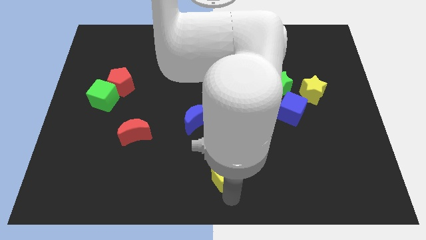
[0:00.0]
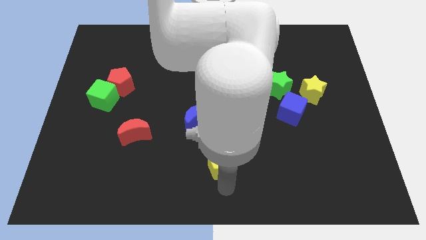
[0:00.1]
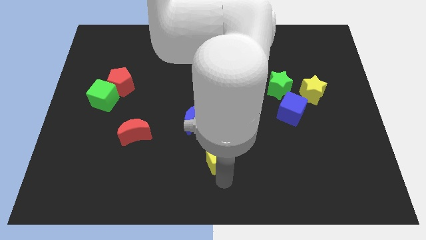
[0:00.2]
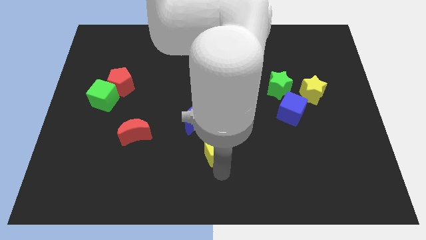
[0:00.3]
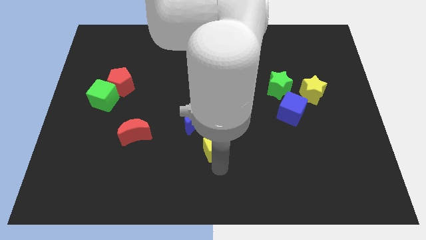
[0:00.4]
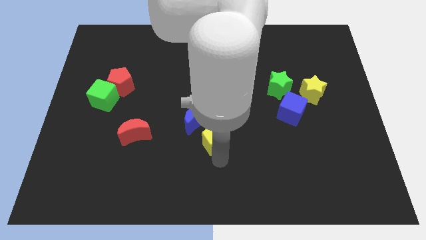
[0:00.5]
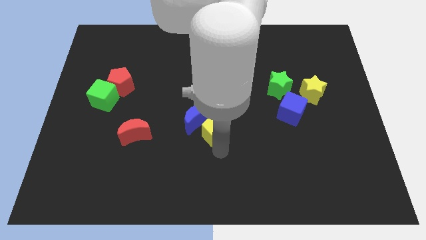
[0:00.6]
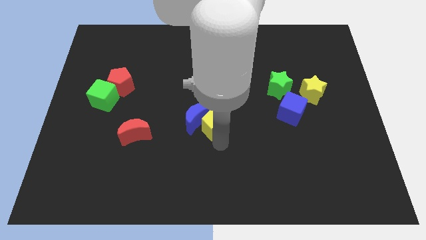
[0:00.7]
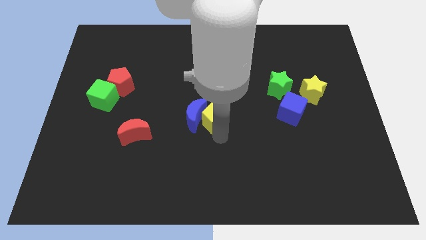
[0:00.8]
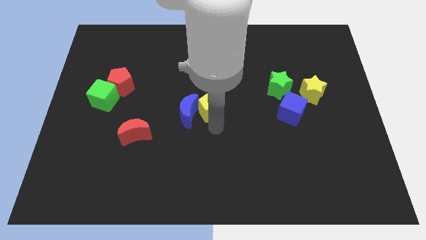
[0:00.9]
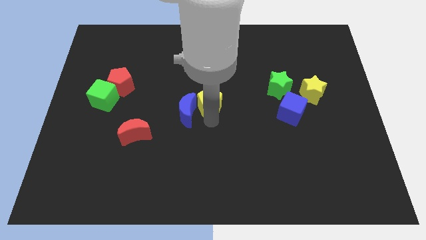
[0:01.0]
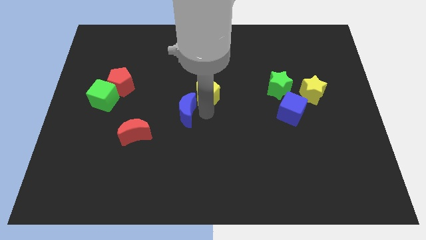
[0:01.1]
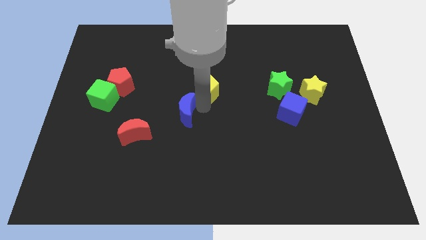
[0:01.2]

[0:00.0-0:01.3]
move the yellow pentagon to the top right corner of the blue moon

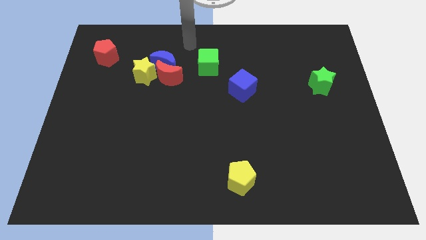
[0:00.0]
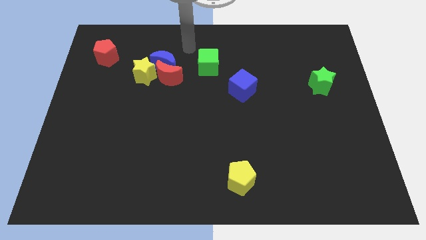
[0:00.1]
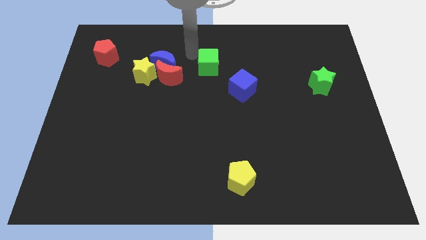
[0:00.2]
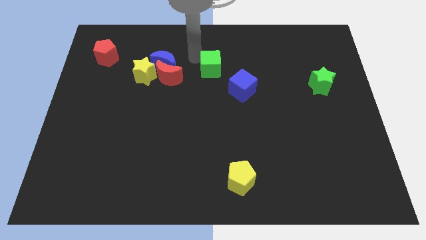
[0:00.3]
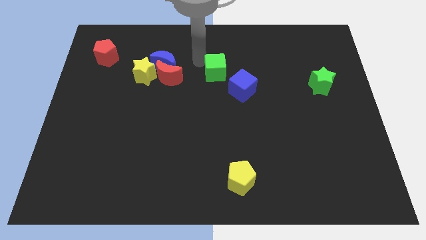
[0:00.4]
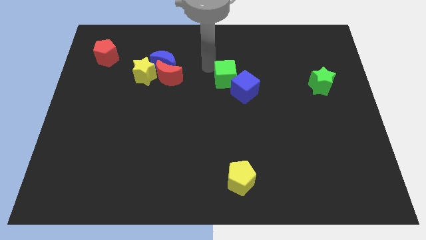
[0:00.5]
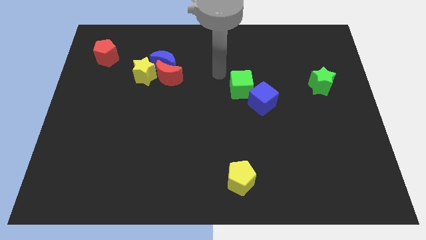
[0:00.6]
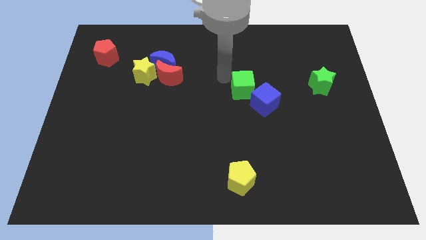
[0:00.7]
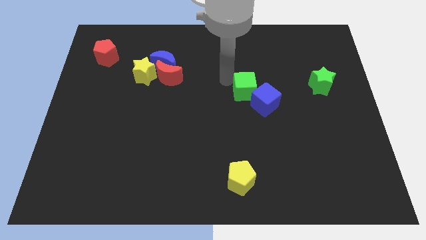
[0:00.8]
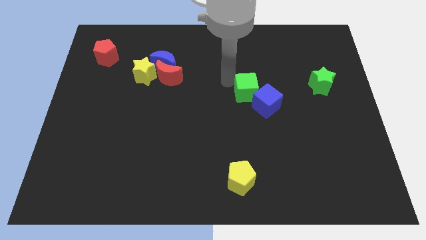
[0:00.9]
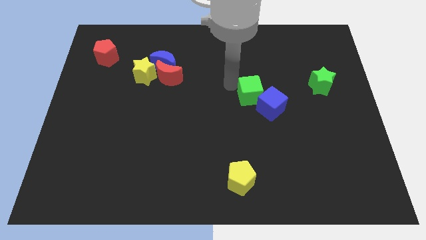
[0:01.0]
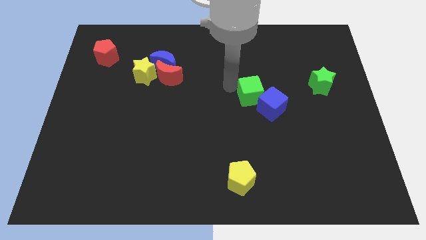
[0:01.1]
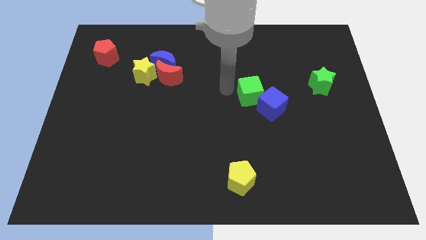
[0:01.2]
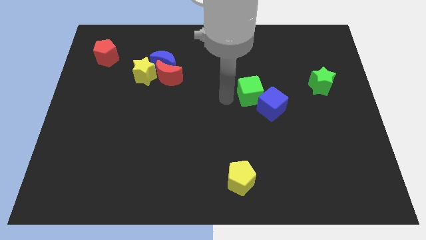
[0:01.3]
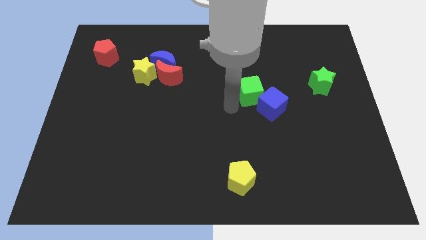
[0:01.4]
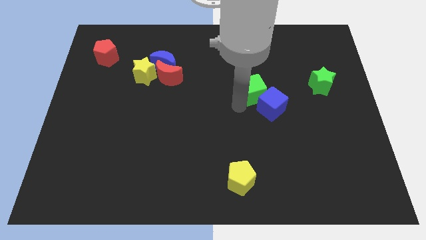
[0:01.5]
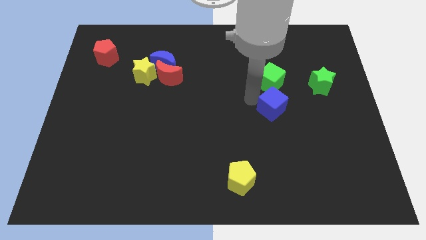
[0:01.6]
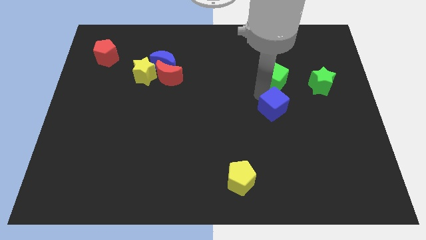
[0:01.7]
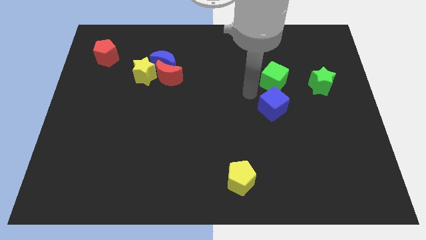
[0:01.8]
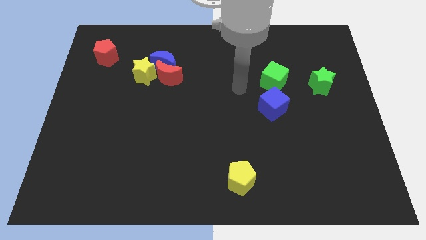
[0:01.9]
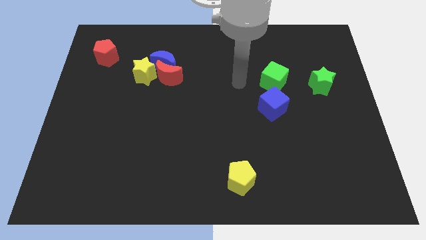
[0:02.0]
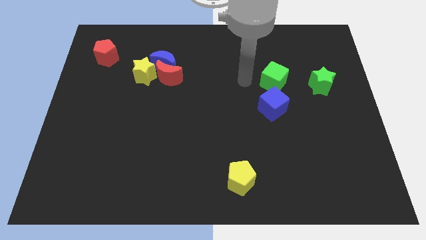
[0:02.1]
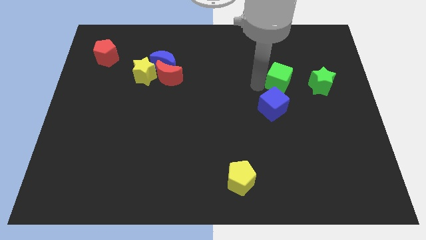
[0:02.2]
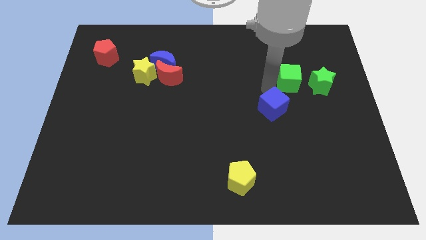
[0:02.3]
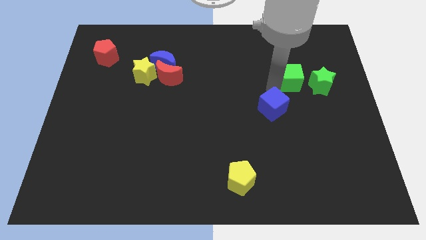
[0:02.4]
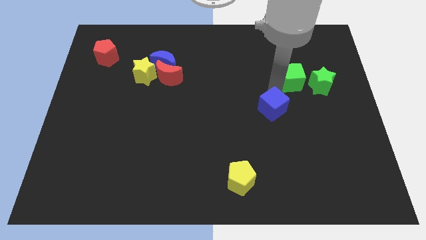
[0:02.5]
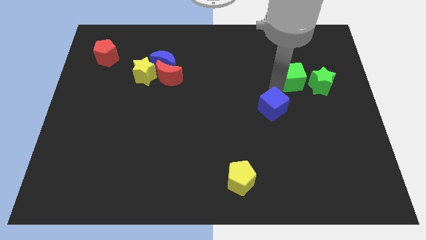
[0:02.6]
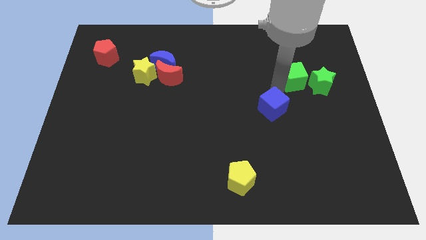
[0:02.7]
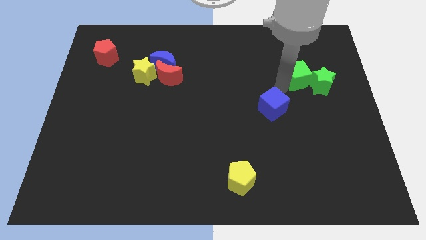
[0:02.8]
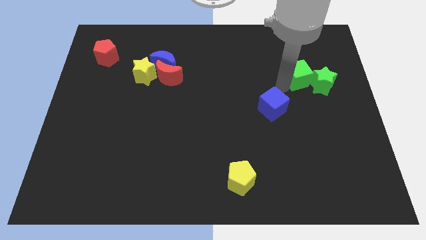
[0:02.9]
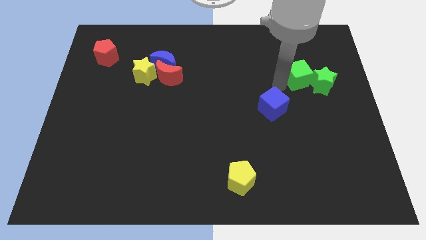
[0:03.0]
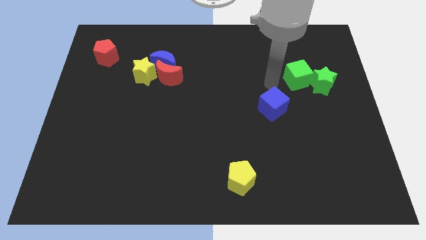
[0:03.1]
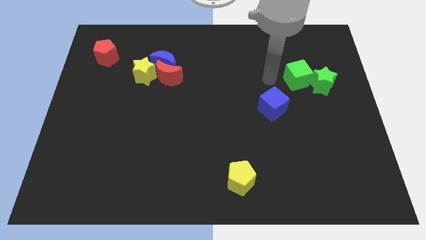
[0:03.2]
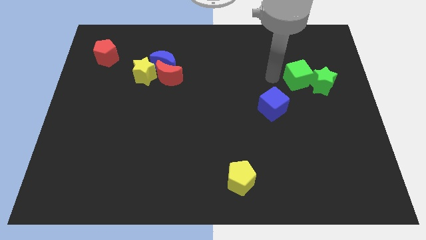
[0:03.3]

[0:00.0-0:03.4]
move the green cube to the left side of the green star

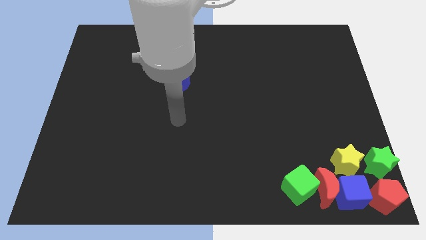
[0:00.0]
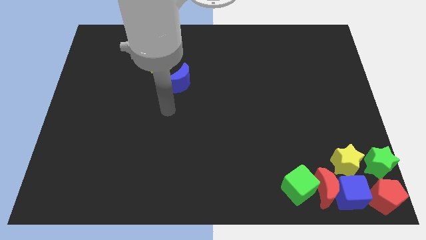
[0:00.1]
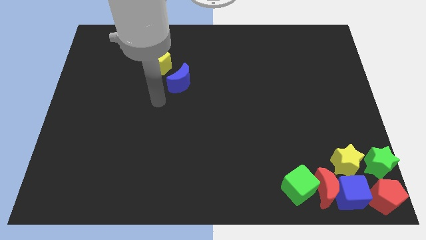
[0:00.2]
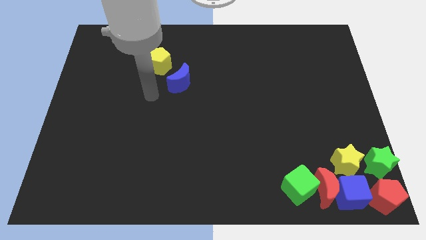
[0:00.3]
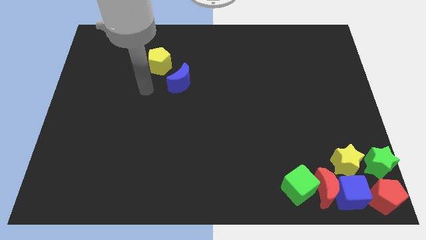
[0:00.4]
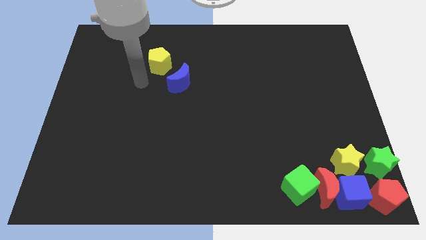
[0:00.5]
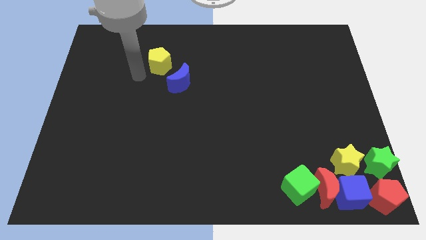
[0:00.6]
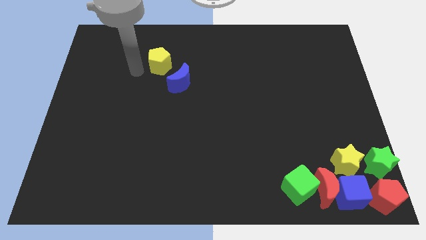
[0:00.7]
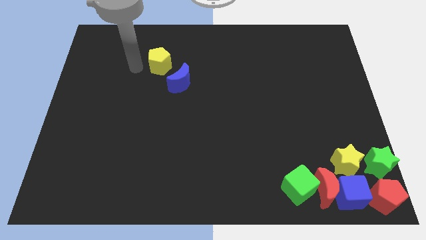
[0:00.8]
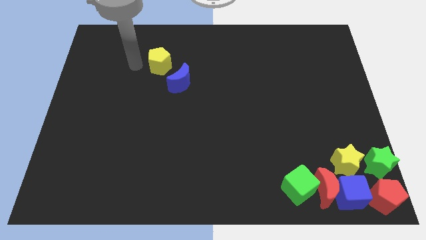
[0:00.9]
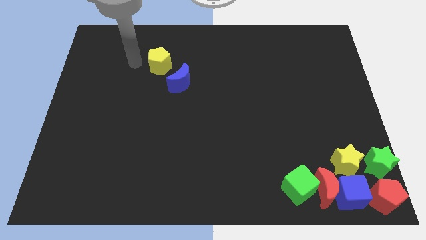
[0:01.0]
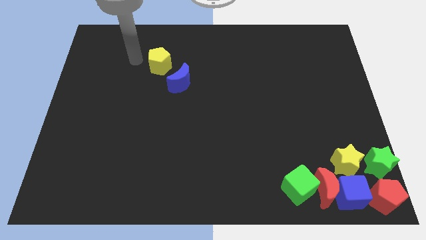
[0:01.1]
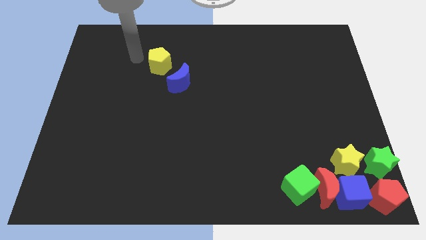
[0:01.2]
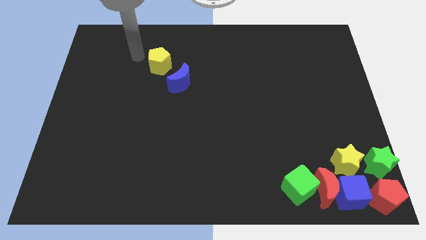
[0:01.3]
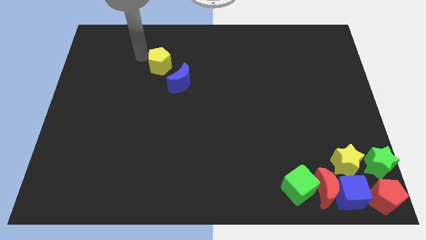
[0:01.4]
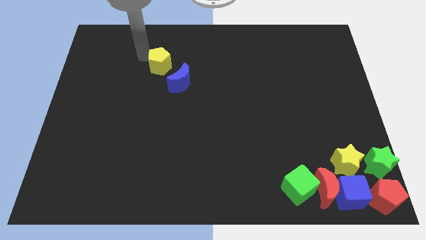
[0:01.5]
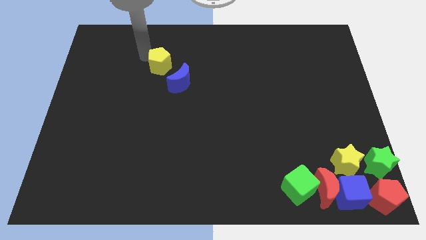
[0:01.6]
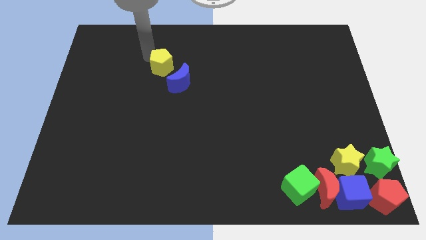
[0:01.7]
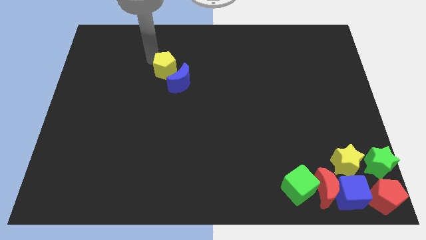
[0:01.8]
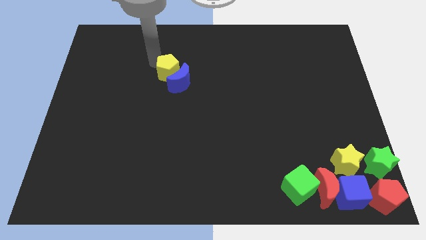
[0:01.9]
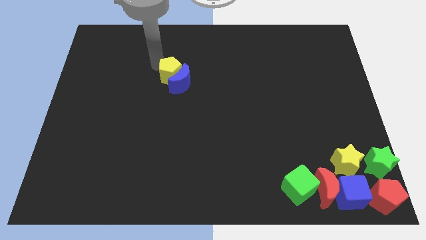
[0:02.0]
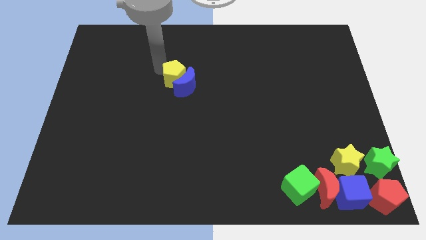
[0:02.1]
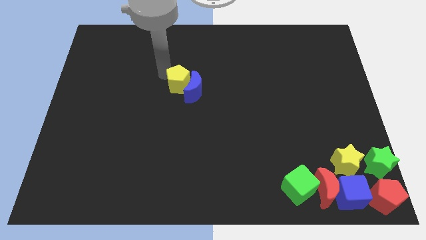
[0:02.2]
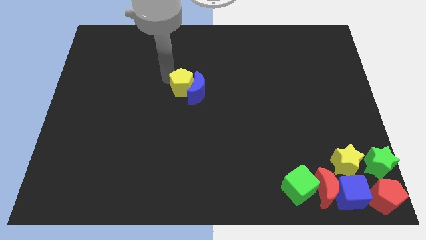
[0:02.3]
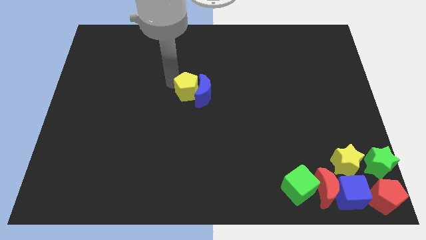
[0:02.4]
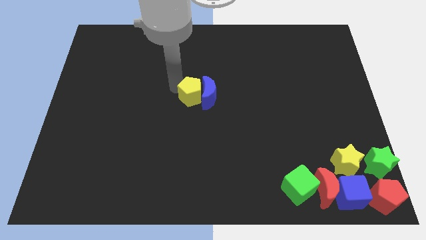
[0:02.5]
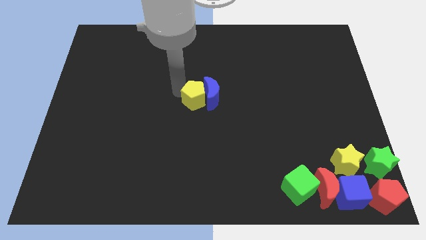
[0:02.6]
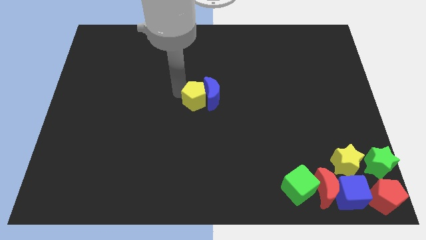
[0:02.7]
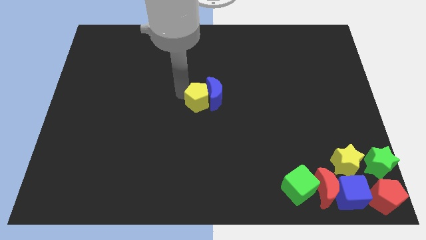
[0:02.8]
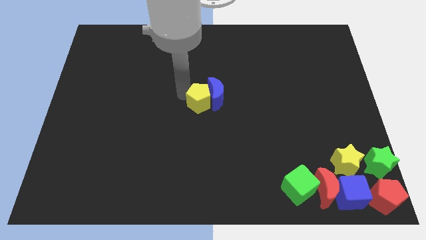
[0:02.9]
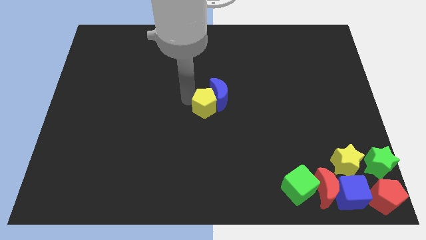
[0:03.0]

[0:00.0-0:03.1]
push the yellow pentagon and blue moon to the center of the board

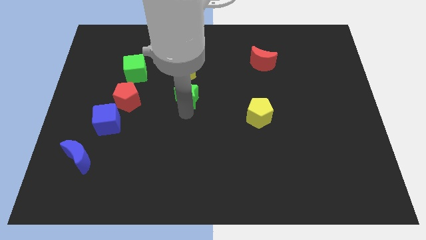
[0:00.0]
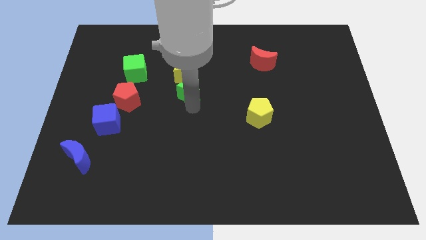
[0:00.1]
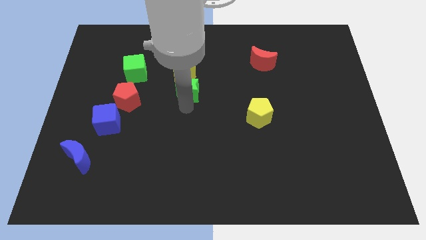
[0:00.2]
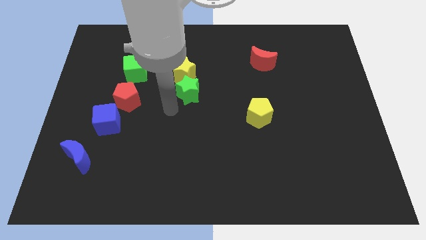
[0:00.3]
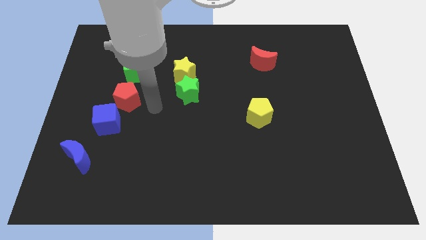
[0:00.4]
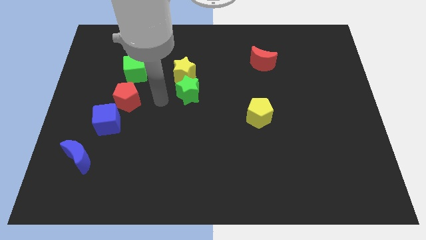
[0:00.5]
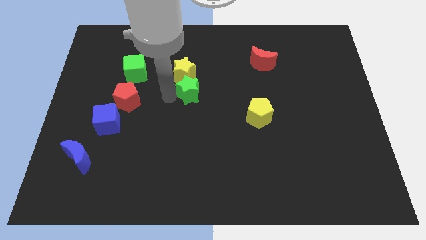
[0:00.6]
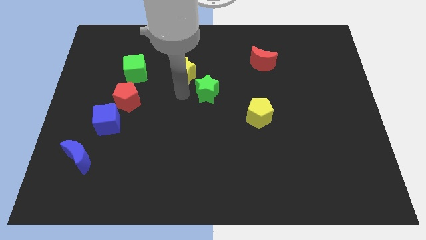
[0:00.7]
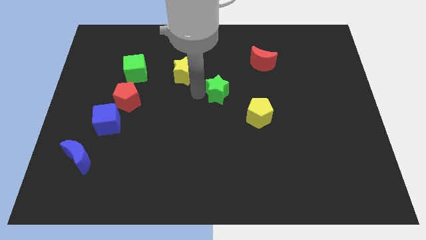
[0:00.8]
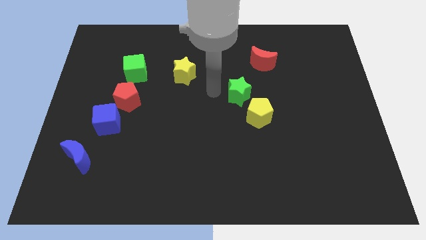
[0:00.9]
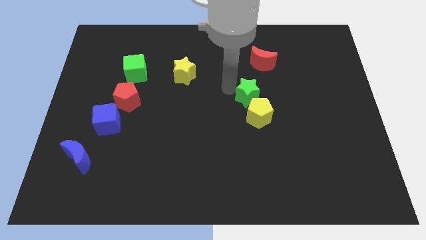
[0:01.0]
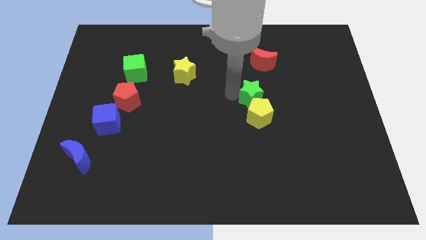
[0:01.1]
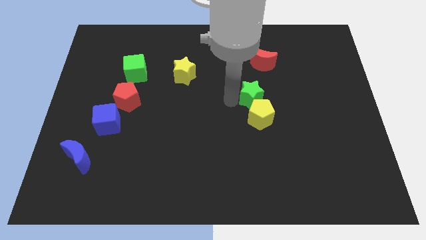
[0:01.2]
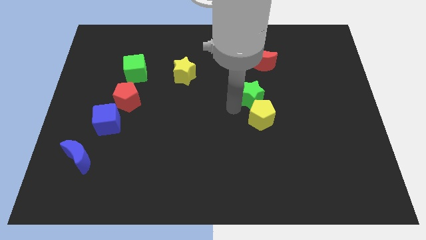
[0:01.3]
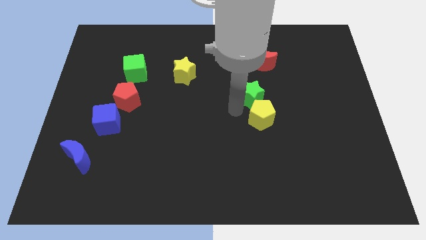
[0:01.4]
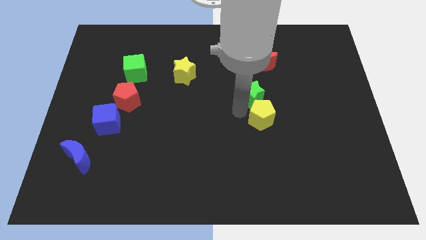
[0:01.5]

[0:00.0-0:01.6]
push the green star into the yellow pentagon to the center
